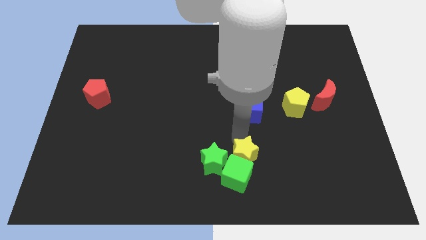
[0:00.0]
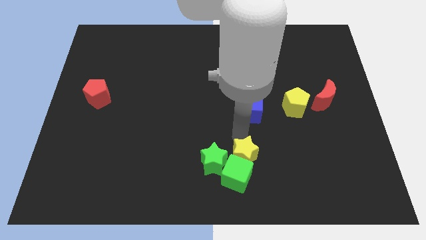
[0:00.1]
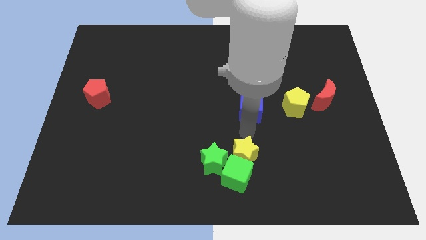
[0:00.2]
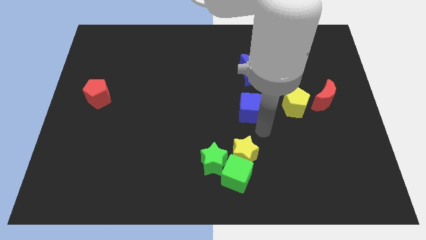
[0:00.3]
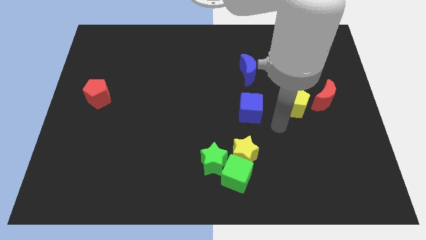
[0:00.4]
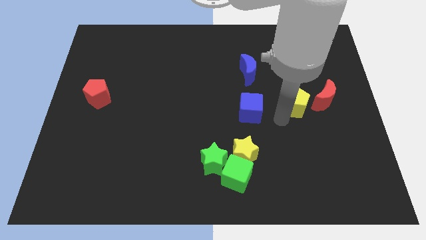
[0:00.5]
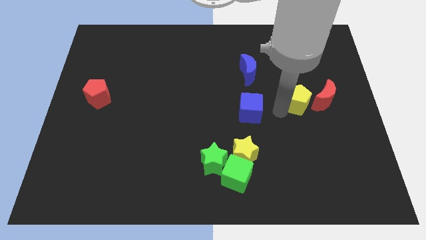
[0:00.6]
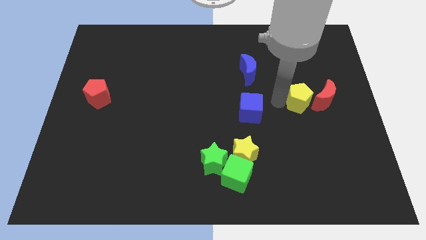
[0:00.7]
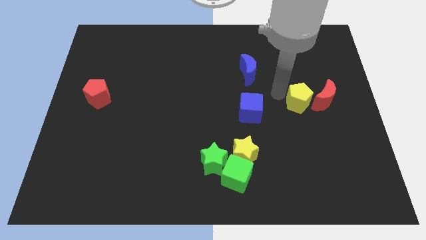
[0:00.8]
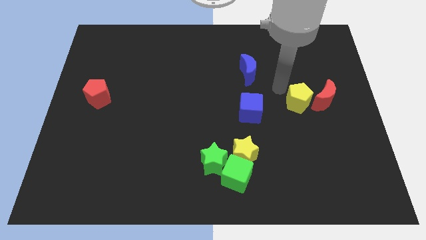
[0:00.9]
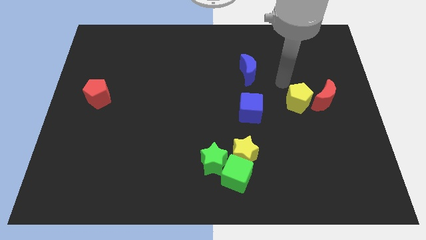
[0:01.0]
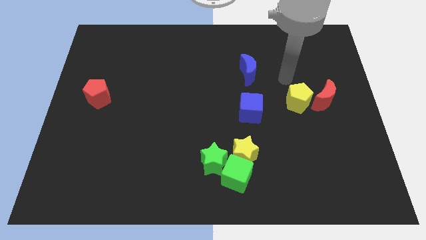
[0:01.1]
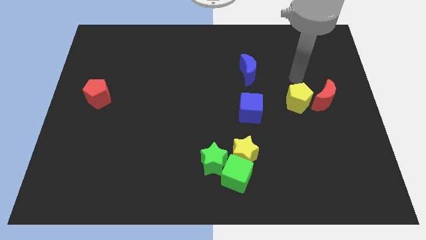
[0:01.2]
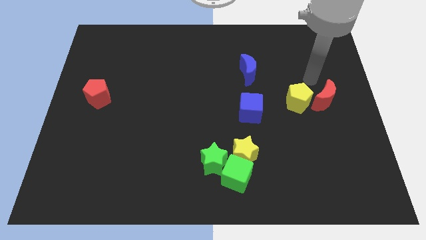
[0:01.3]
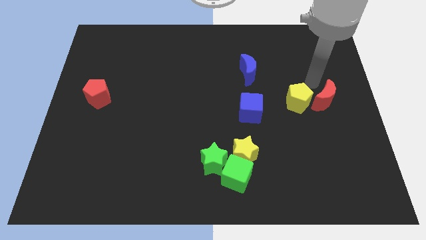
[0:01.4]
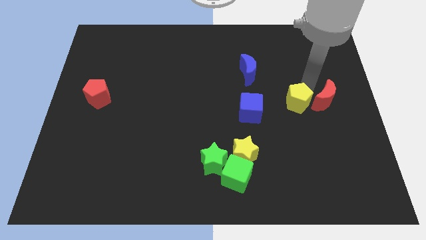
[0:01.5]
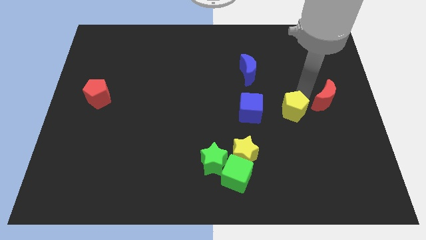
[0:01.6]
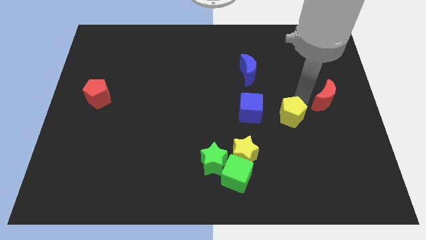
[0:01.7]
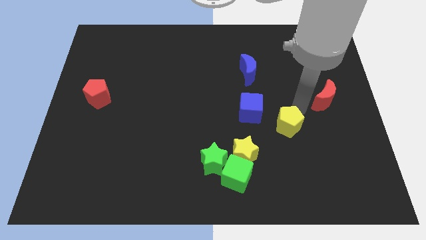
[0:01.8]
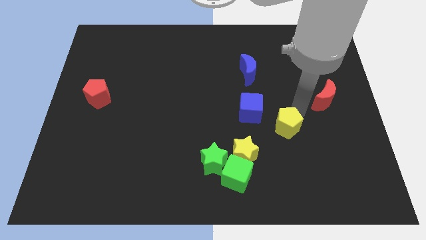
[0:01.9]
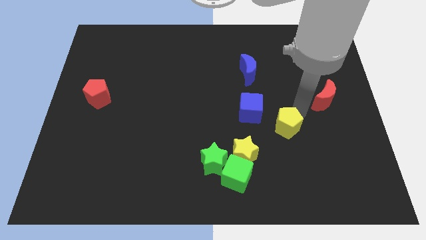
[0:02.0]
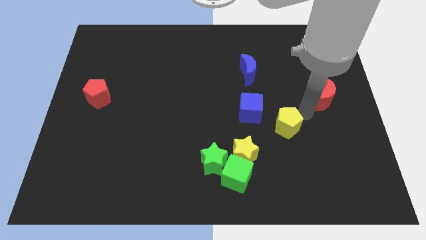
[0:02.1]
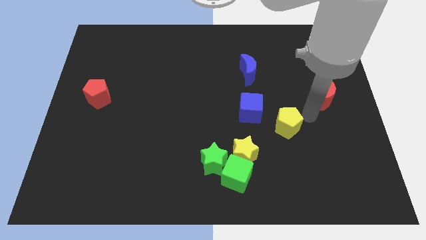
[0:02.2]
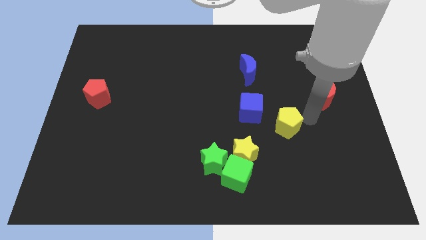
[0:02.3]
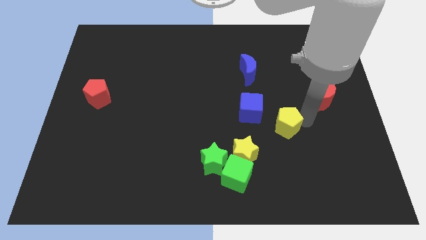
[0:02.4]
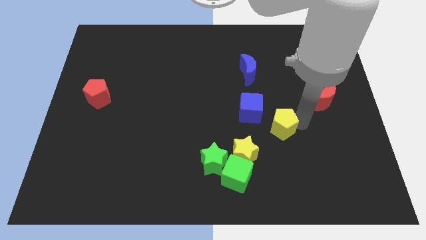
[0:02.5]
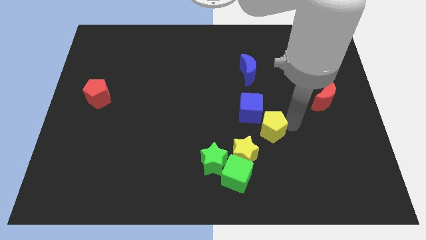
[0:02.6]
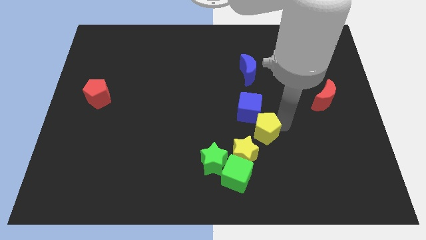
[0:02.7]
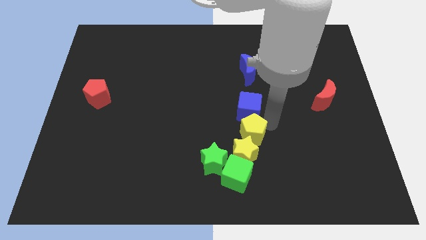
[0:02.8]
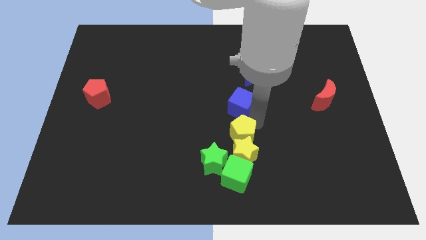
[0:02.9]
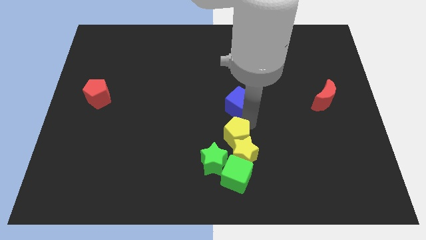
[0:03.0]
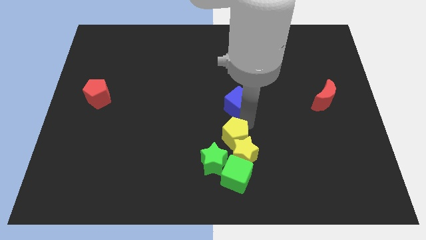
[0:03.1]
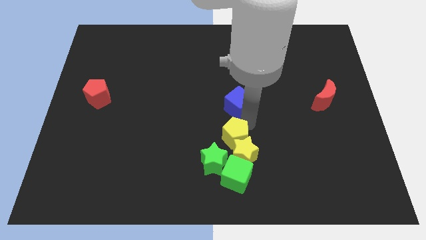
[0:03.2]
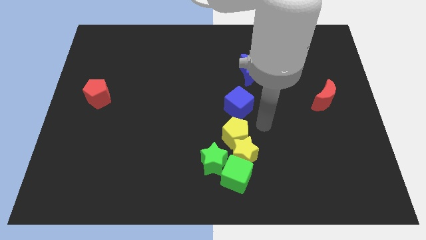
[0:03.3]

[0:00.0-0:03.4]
slide the yellow pentagon to the bottom side of the blue cube

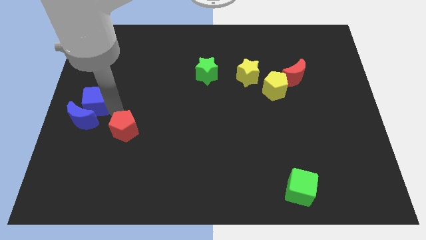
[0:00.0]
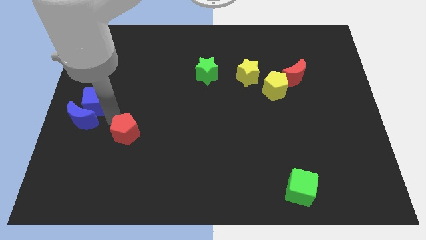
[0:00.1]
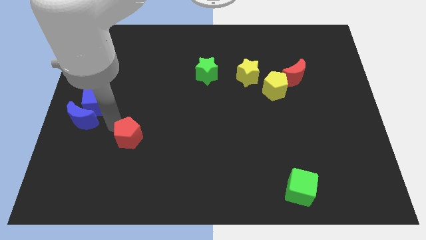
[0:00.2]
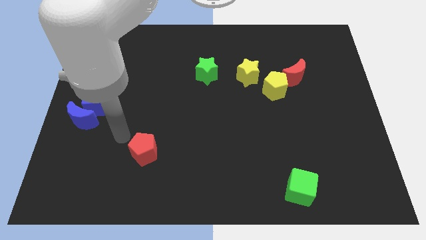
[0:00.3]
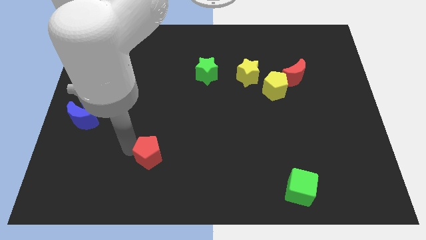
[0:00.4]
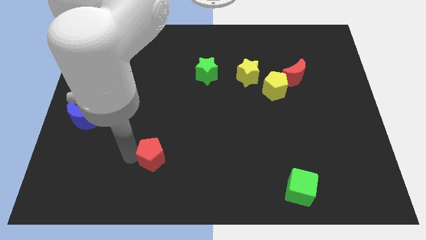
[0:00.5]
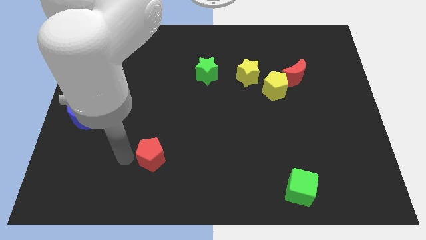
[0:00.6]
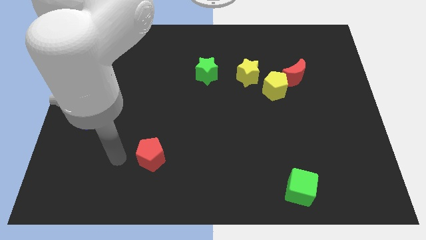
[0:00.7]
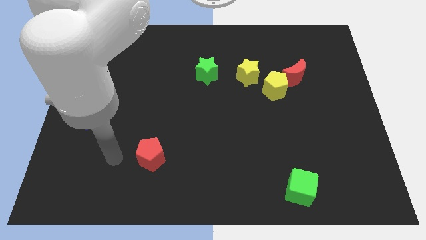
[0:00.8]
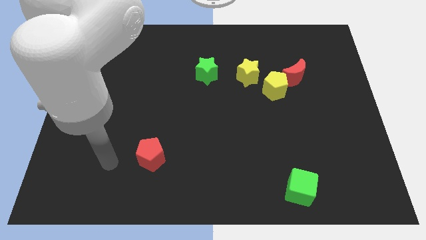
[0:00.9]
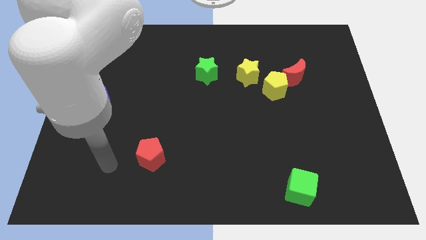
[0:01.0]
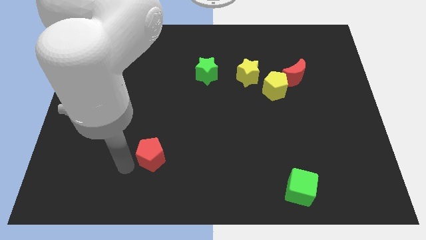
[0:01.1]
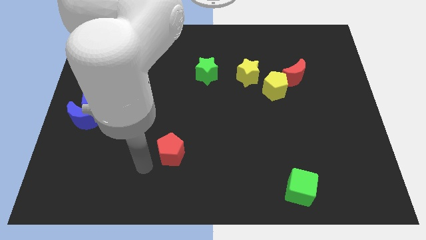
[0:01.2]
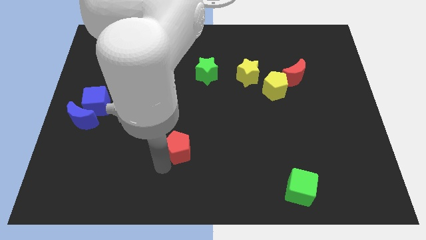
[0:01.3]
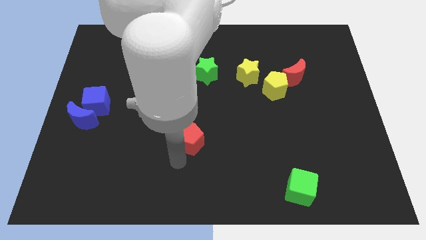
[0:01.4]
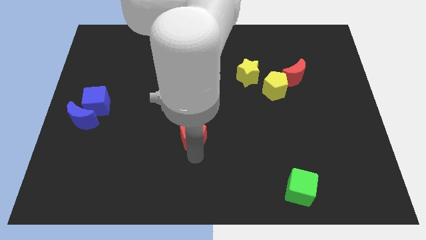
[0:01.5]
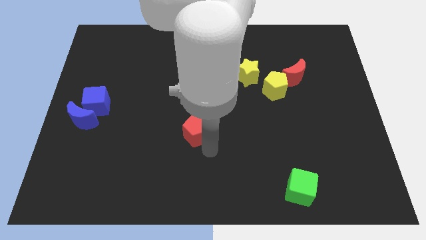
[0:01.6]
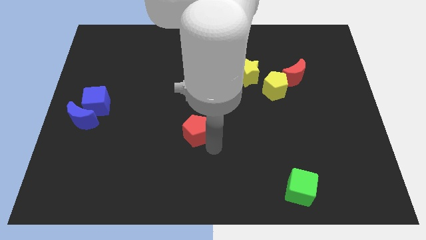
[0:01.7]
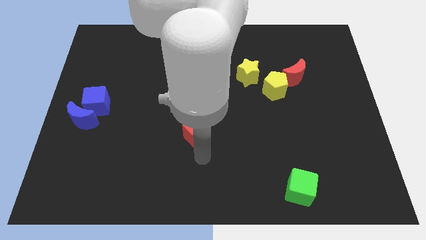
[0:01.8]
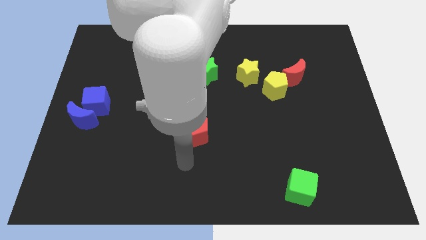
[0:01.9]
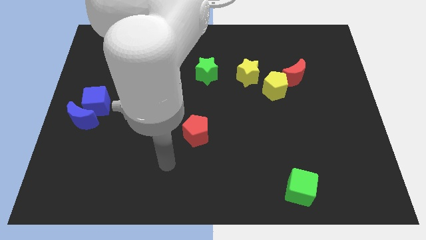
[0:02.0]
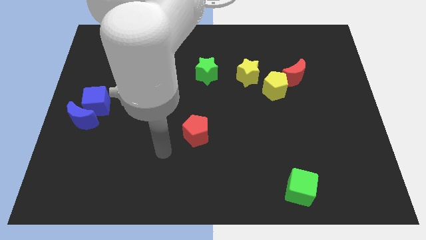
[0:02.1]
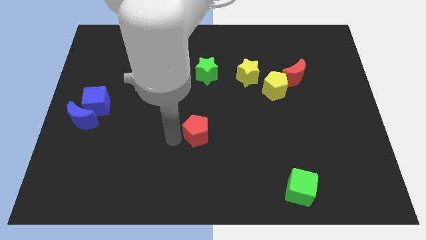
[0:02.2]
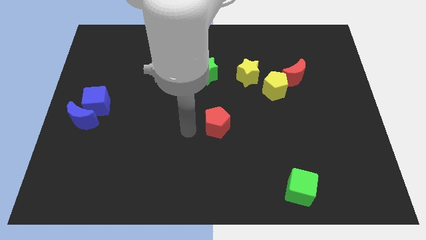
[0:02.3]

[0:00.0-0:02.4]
place the red pentagon at the center of the board

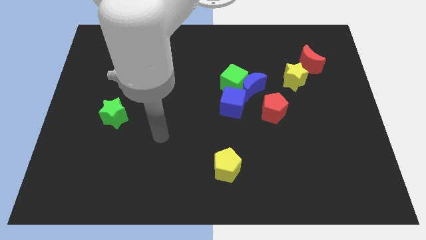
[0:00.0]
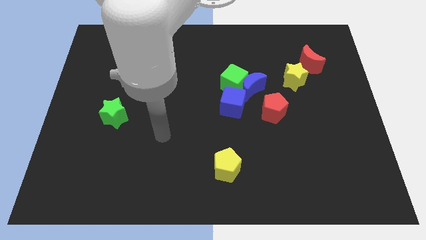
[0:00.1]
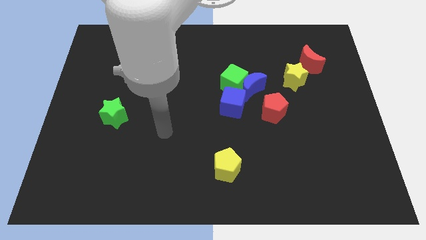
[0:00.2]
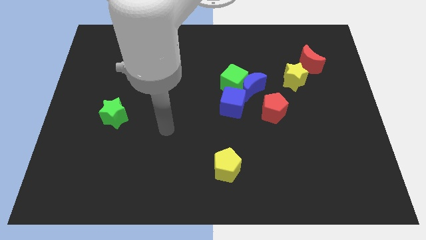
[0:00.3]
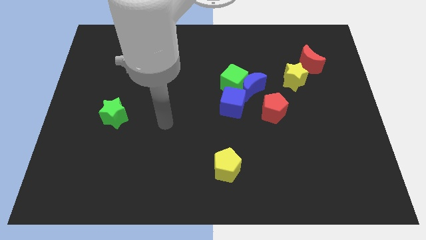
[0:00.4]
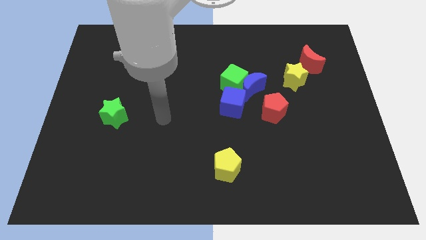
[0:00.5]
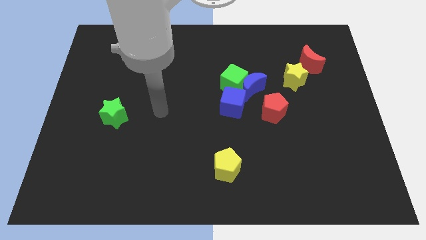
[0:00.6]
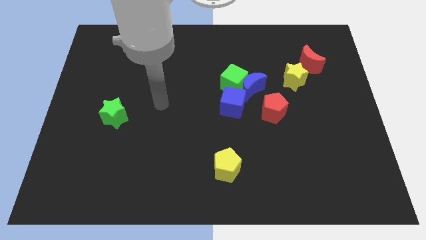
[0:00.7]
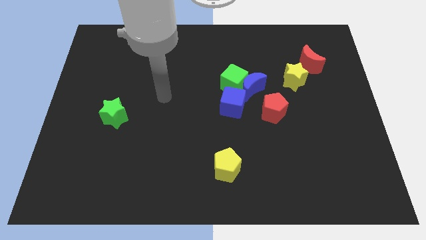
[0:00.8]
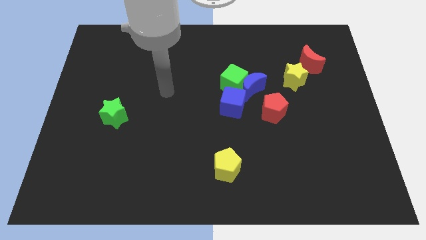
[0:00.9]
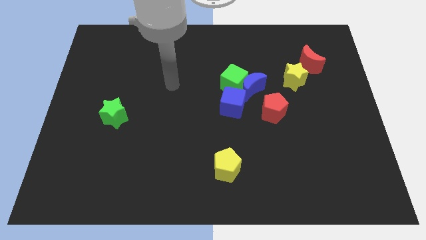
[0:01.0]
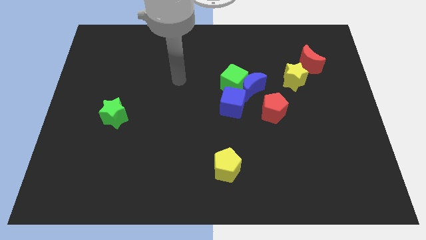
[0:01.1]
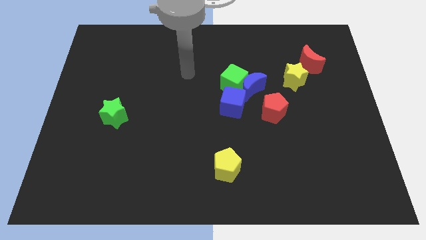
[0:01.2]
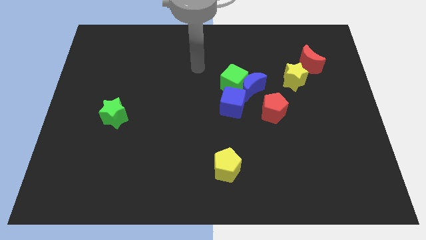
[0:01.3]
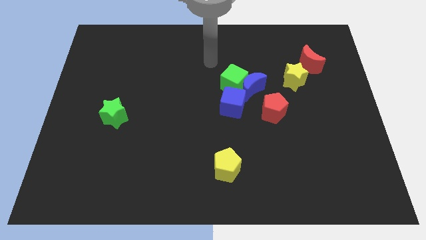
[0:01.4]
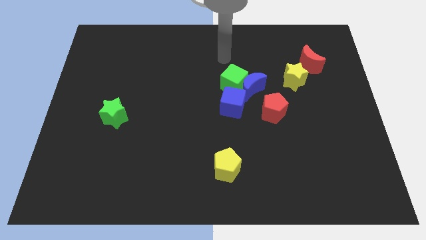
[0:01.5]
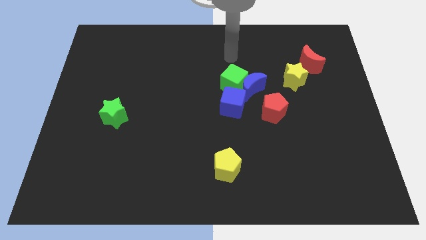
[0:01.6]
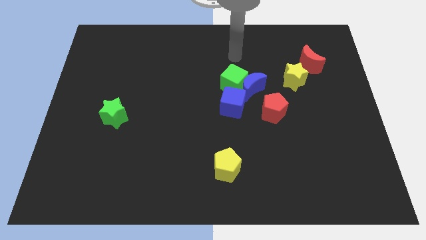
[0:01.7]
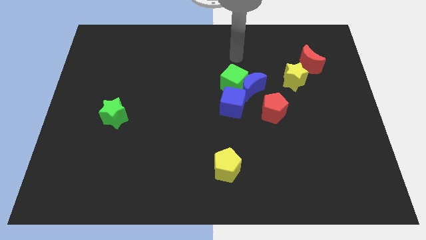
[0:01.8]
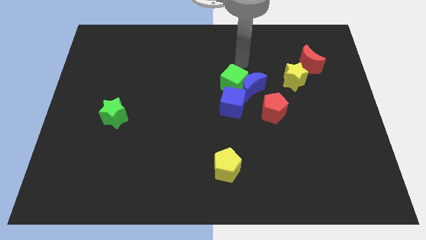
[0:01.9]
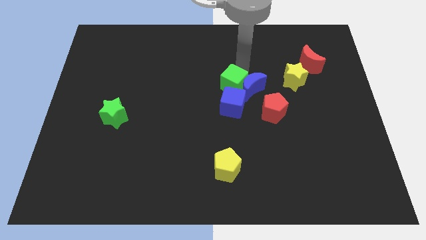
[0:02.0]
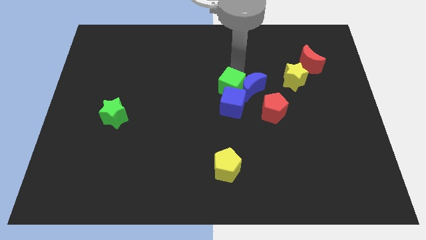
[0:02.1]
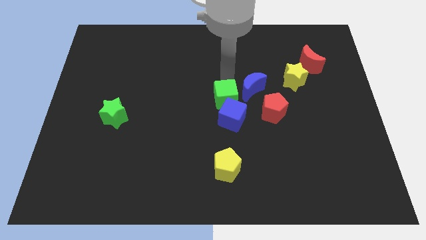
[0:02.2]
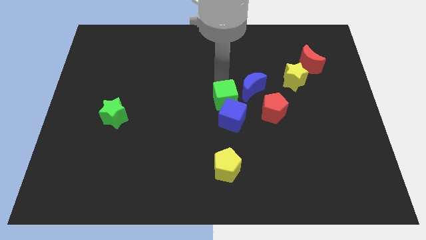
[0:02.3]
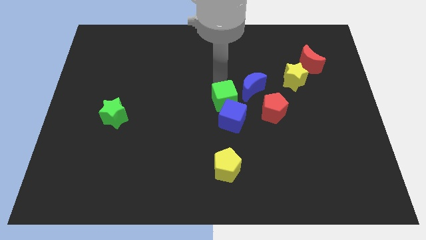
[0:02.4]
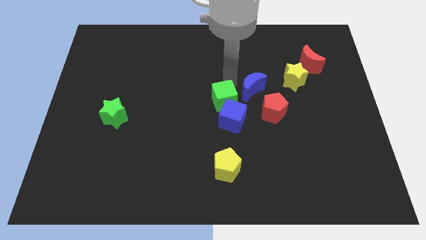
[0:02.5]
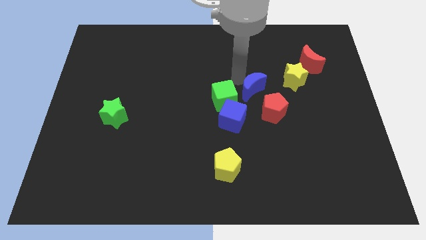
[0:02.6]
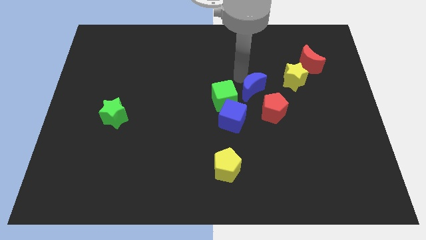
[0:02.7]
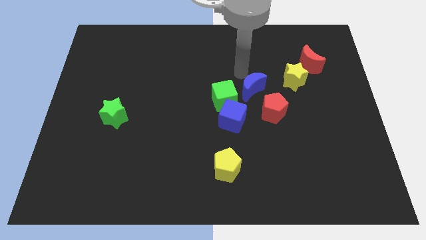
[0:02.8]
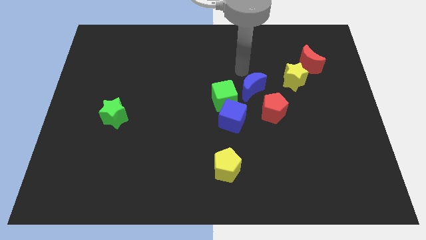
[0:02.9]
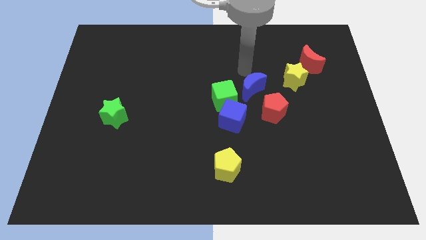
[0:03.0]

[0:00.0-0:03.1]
push the green cube along with the blue cube slightly to the bottom
